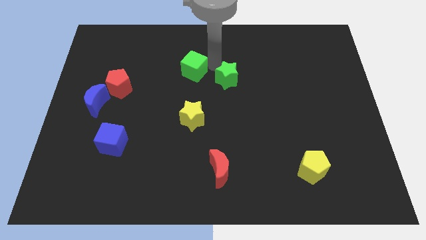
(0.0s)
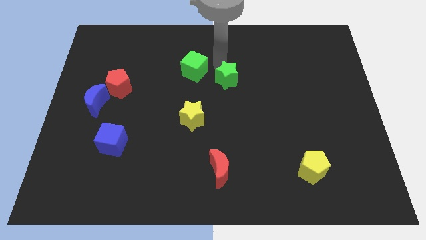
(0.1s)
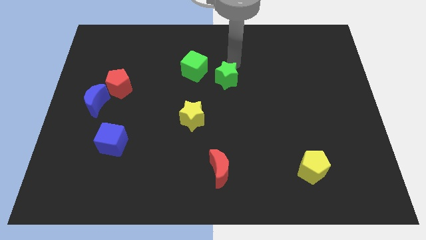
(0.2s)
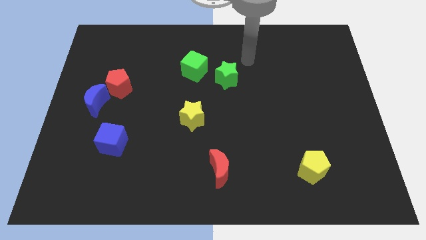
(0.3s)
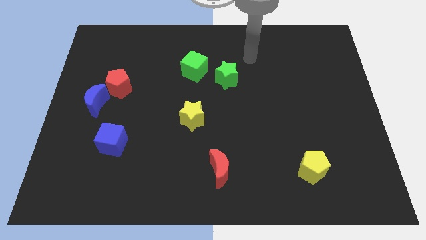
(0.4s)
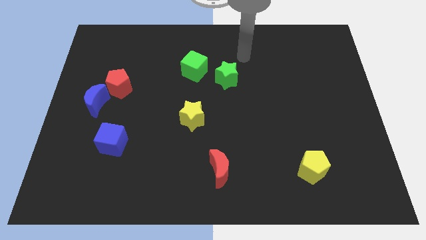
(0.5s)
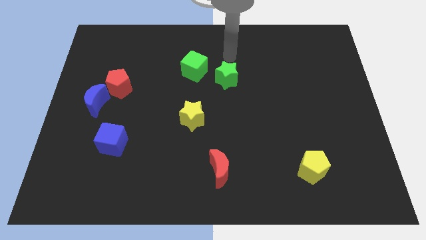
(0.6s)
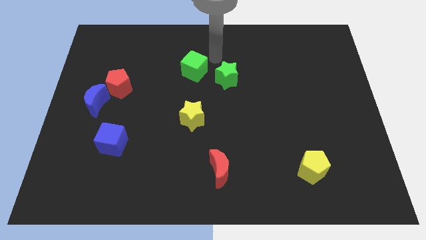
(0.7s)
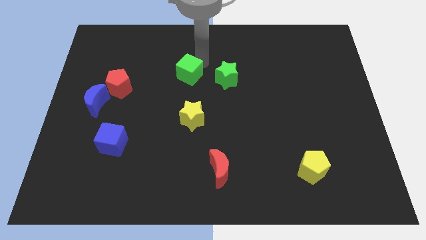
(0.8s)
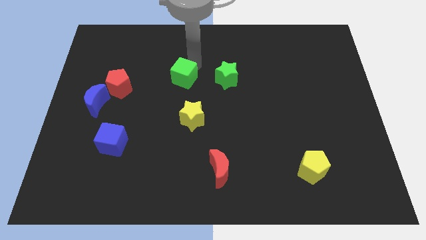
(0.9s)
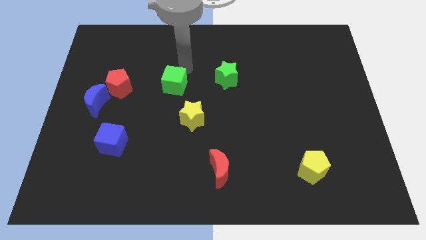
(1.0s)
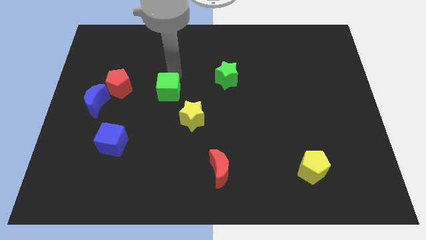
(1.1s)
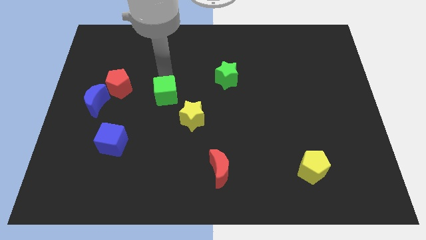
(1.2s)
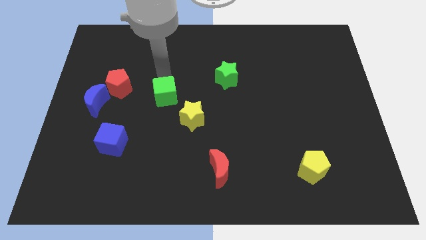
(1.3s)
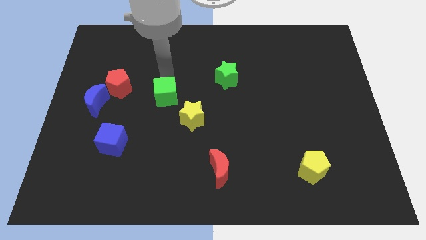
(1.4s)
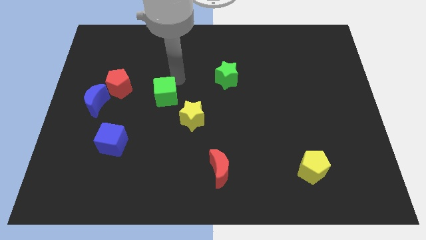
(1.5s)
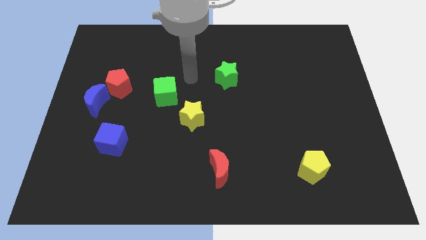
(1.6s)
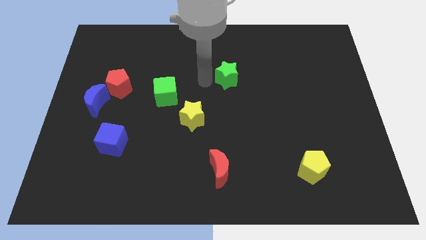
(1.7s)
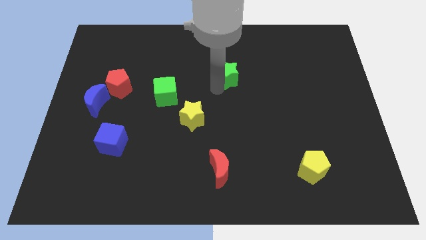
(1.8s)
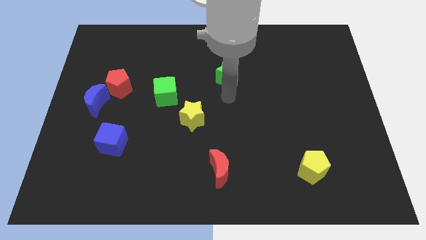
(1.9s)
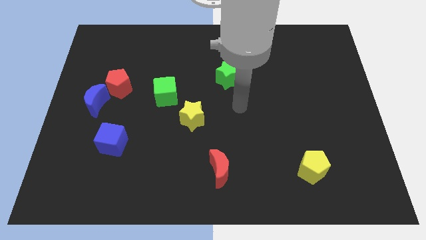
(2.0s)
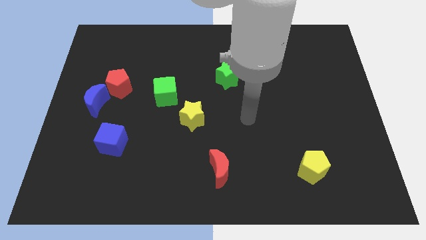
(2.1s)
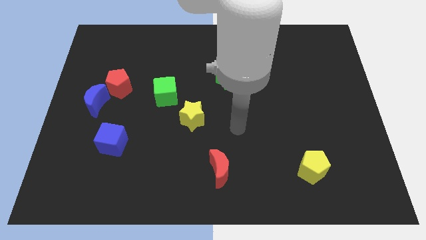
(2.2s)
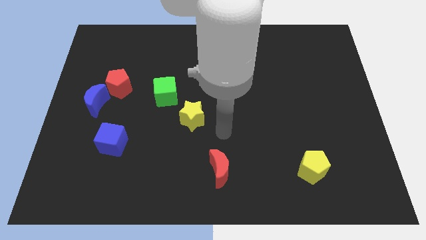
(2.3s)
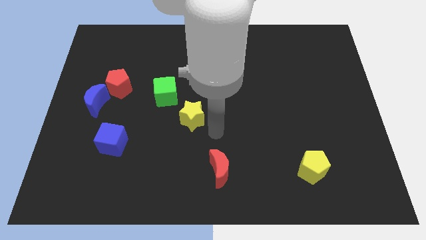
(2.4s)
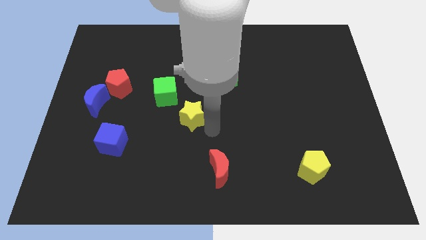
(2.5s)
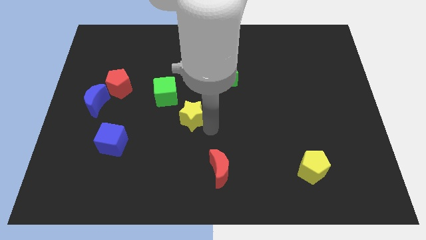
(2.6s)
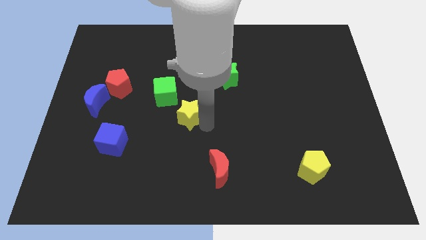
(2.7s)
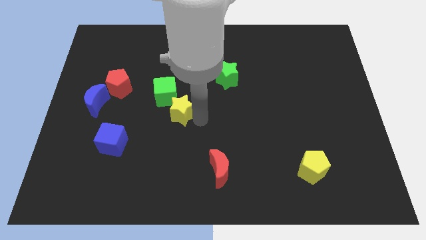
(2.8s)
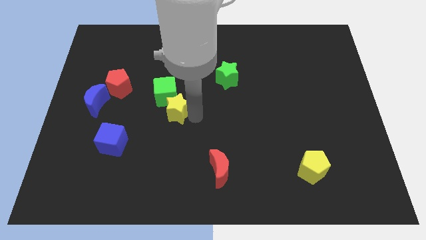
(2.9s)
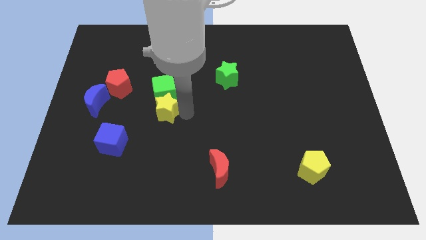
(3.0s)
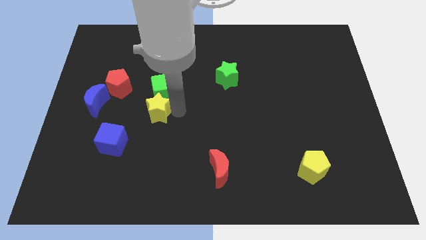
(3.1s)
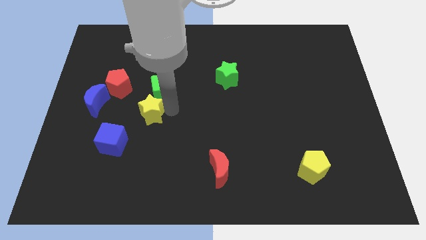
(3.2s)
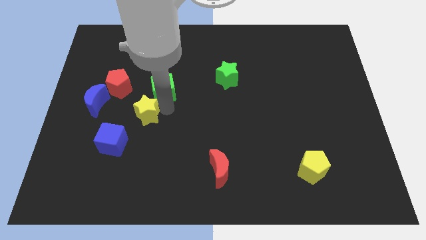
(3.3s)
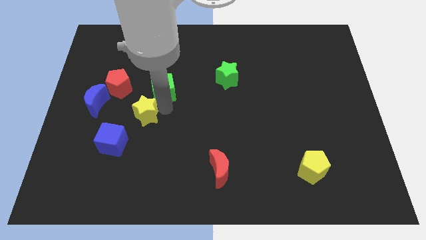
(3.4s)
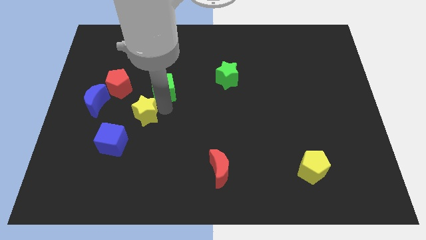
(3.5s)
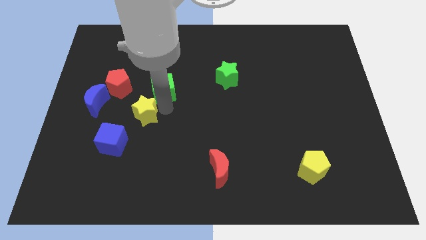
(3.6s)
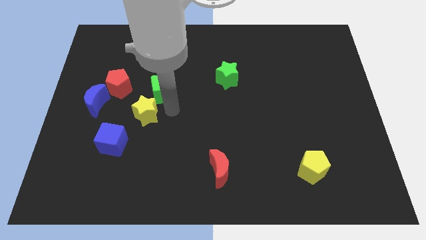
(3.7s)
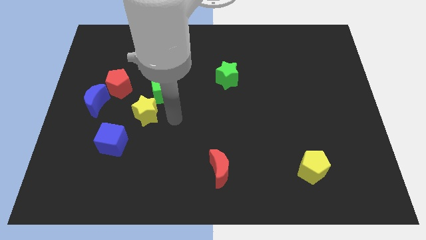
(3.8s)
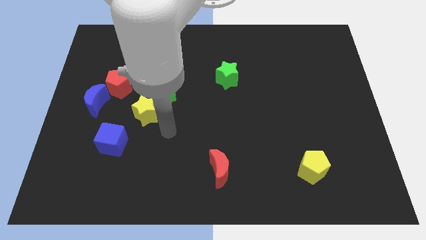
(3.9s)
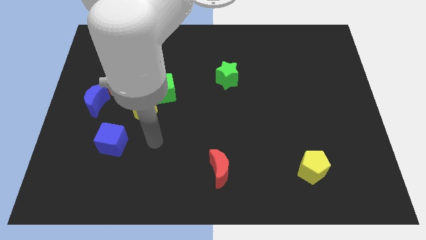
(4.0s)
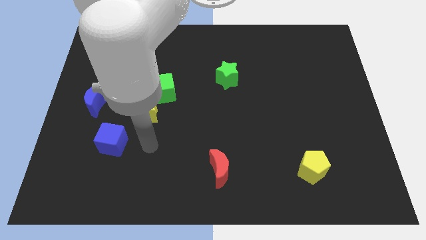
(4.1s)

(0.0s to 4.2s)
place the green cube and the yellow star at one place

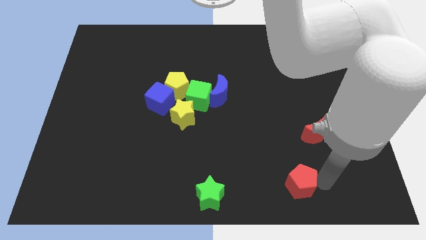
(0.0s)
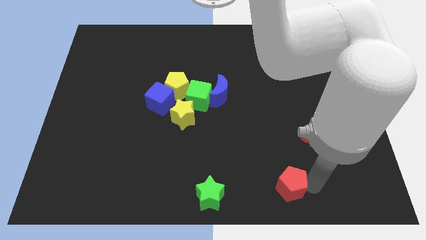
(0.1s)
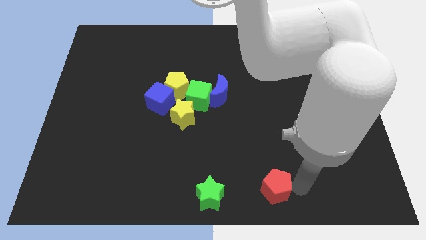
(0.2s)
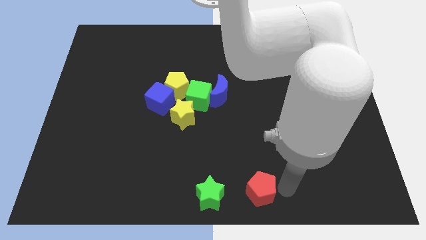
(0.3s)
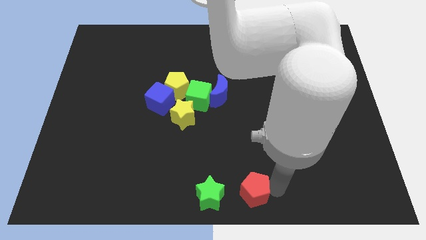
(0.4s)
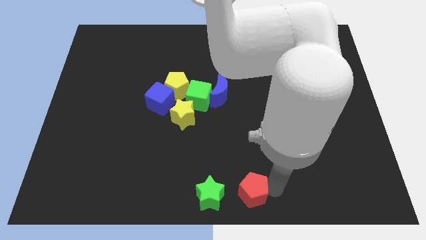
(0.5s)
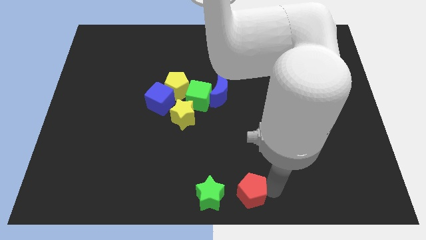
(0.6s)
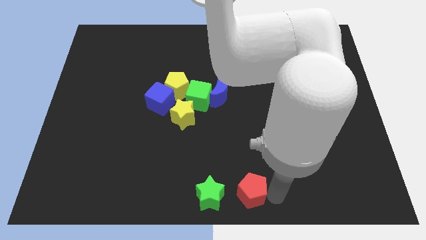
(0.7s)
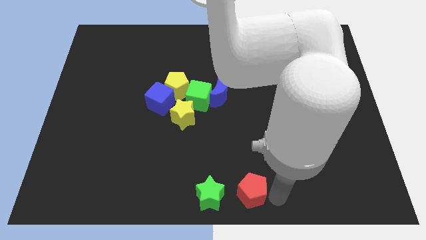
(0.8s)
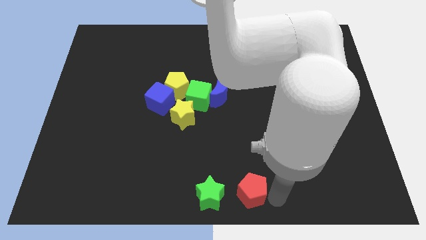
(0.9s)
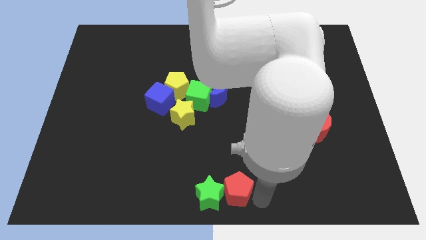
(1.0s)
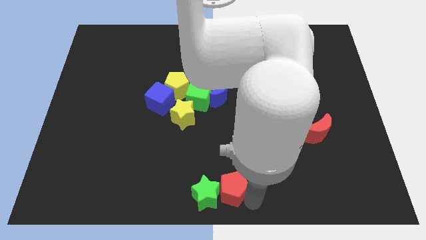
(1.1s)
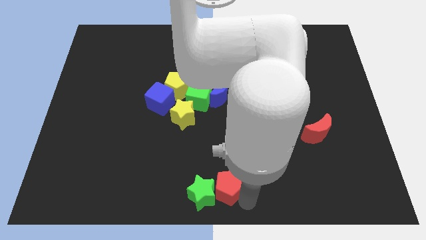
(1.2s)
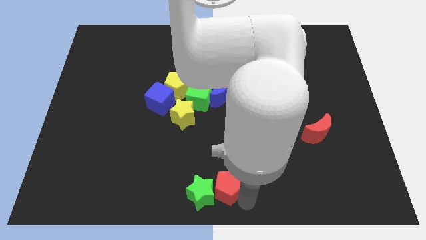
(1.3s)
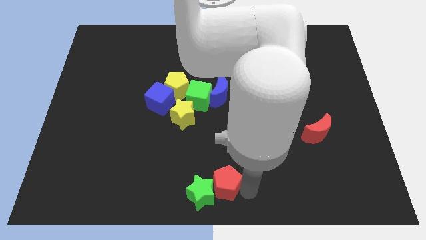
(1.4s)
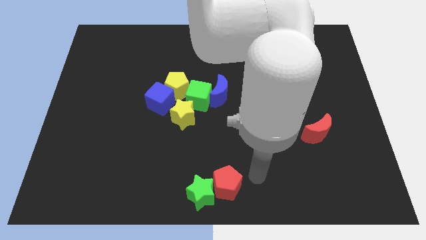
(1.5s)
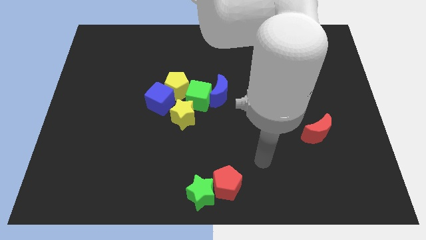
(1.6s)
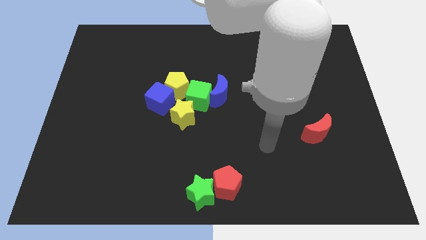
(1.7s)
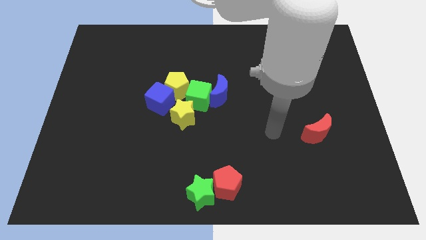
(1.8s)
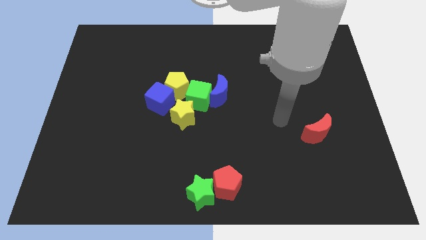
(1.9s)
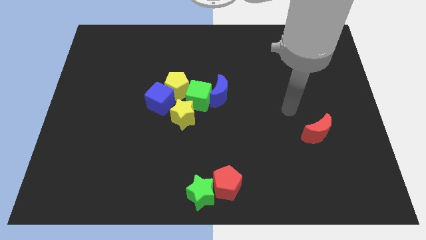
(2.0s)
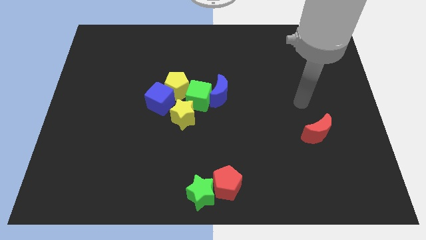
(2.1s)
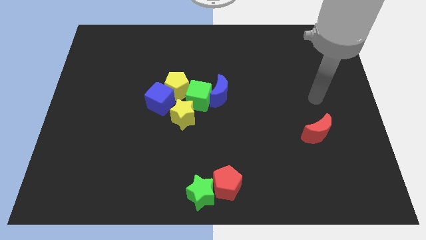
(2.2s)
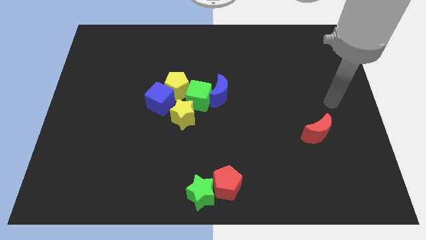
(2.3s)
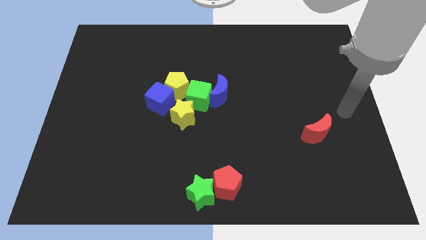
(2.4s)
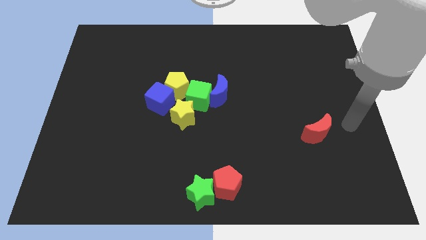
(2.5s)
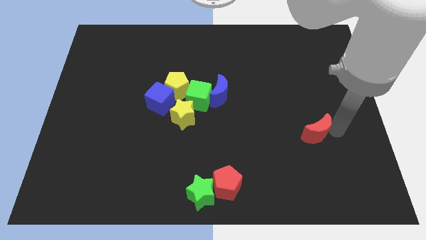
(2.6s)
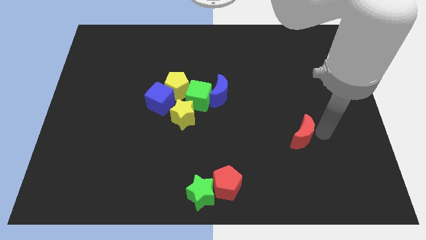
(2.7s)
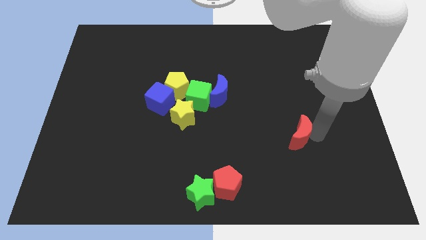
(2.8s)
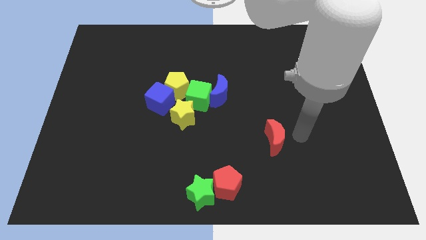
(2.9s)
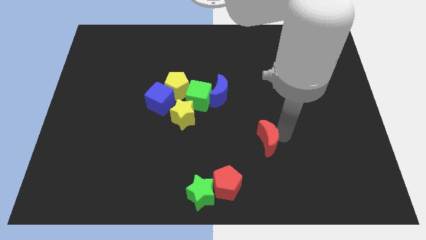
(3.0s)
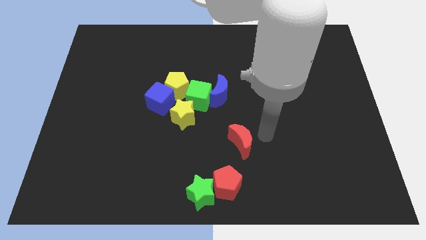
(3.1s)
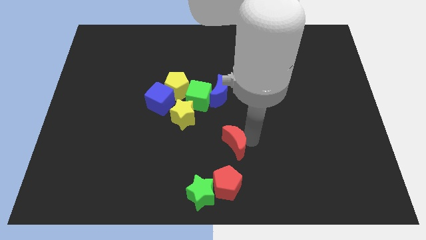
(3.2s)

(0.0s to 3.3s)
push the red pentagon into the green star

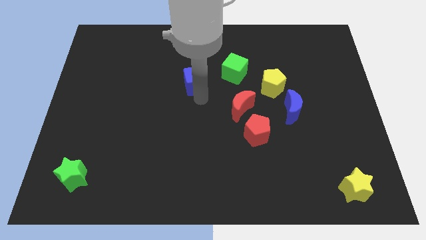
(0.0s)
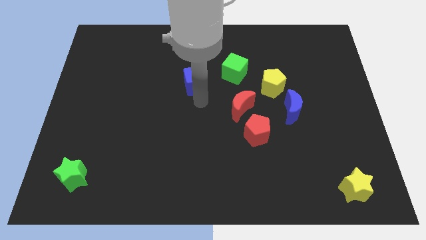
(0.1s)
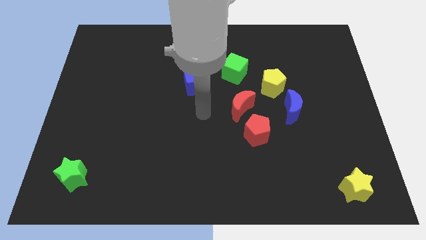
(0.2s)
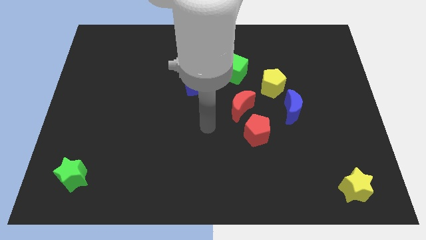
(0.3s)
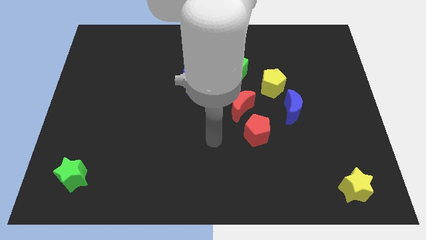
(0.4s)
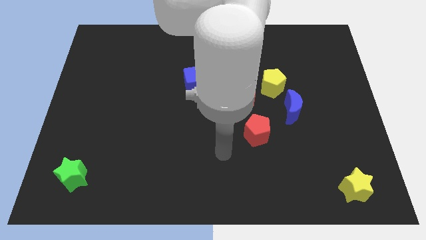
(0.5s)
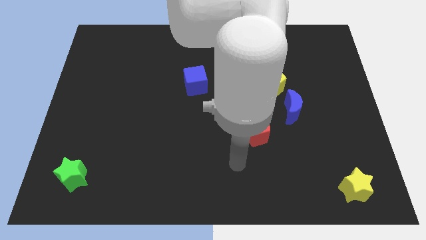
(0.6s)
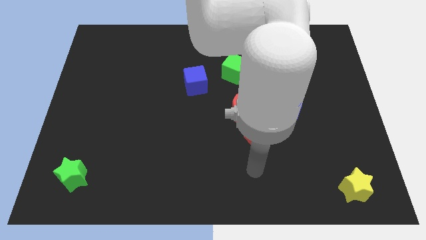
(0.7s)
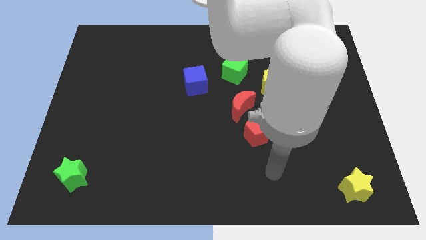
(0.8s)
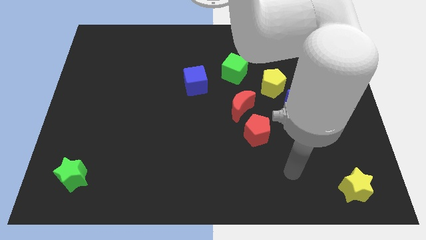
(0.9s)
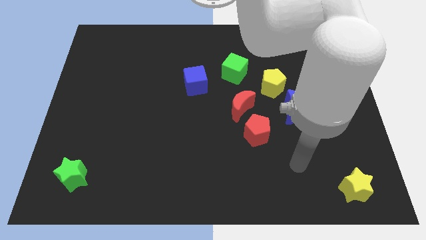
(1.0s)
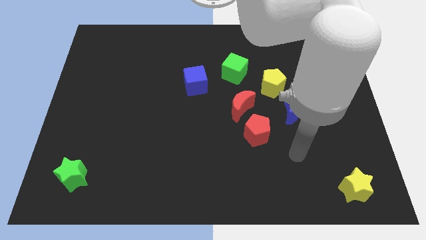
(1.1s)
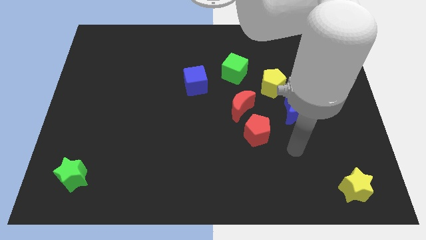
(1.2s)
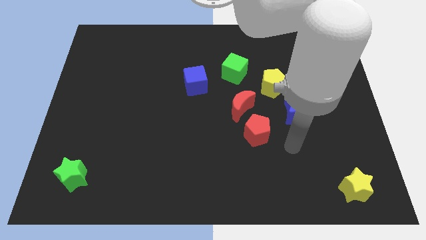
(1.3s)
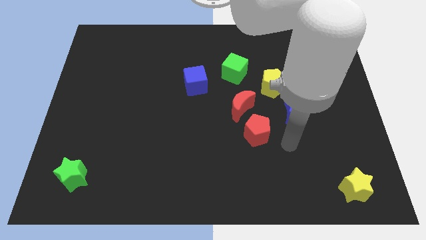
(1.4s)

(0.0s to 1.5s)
move your arm to the bottom of the blue crescent
